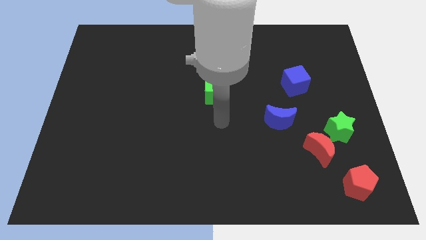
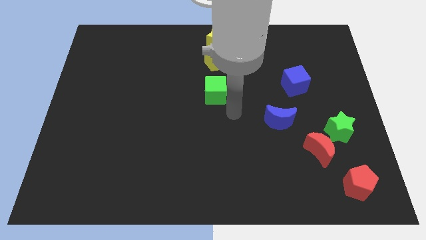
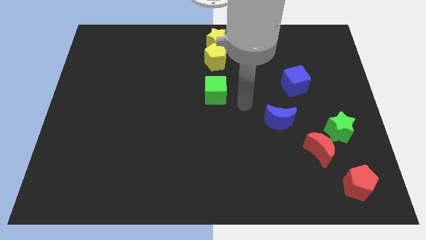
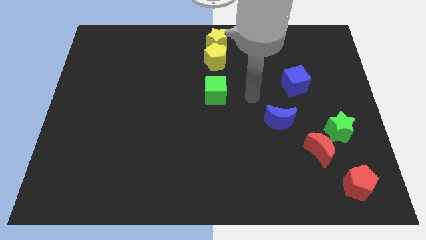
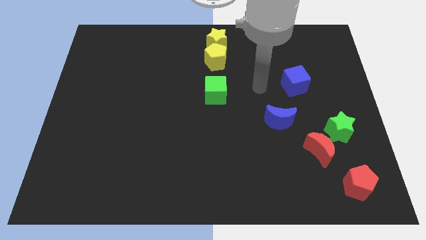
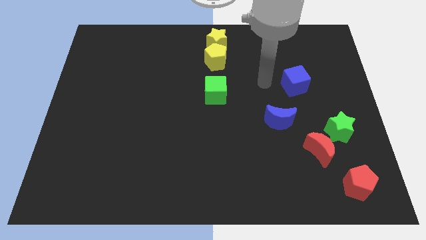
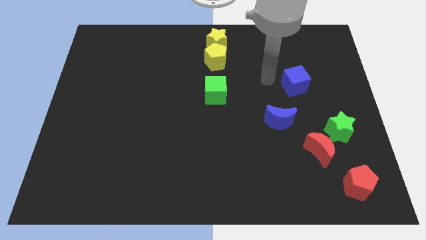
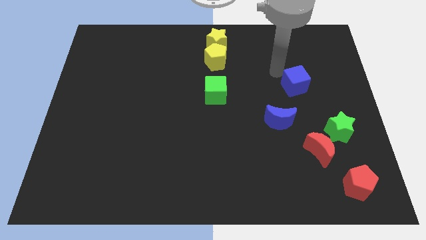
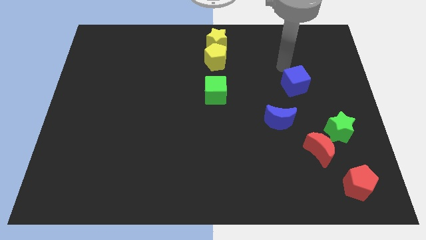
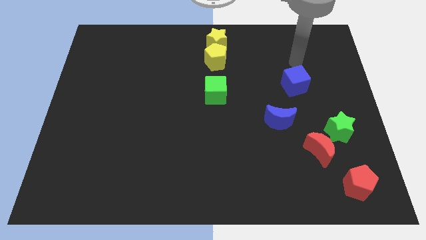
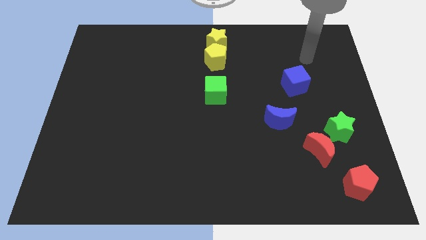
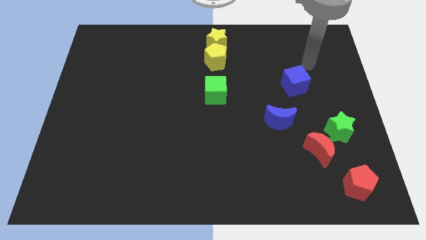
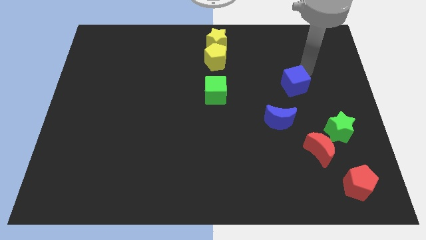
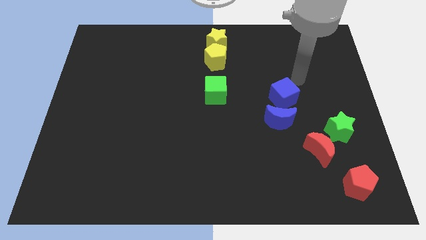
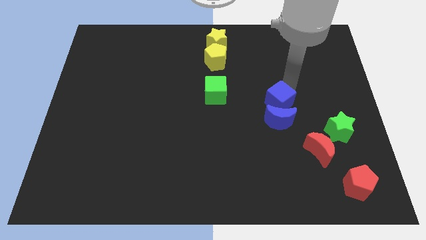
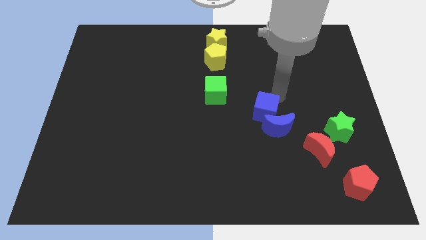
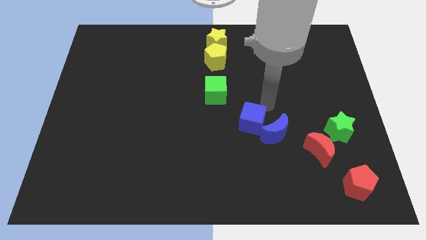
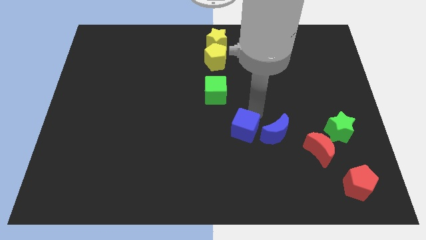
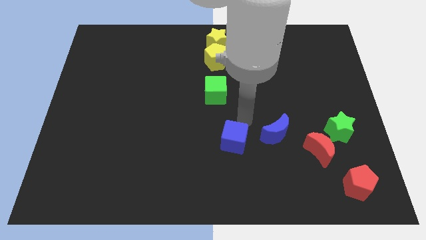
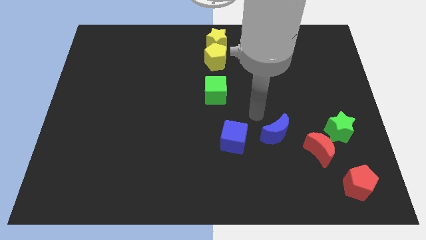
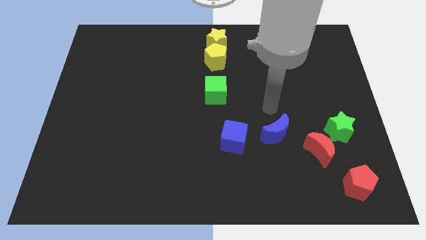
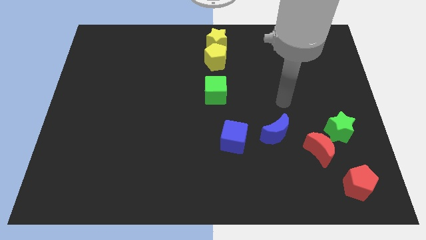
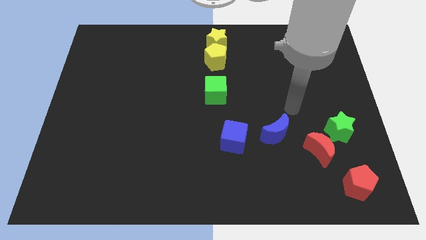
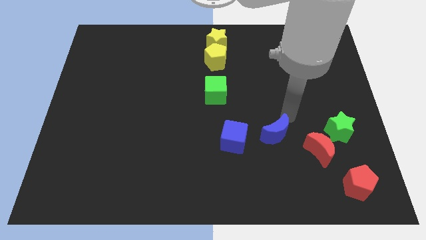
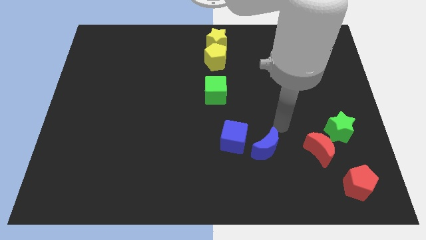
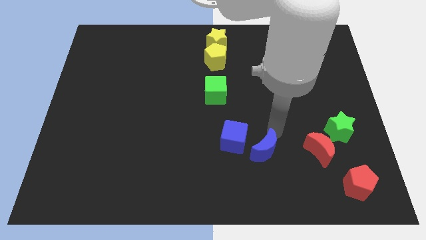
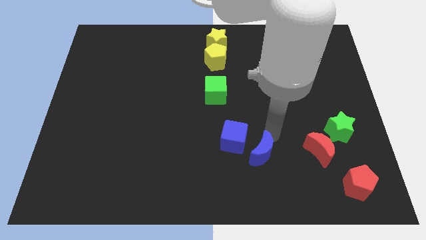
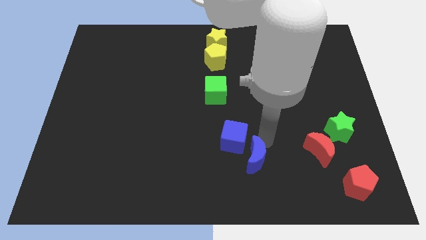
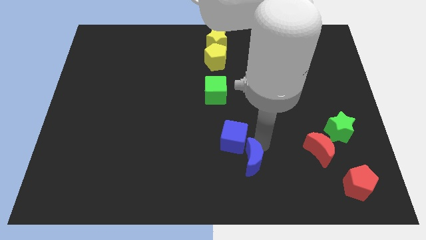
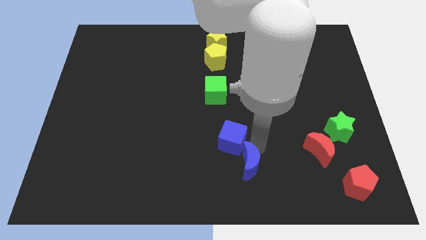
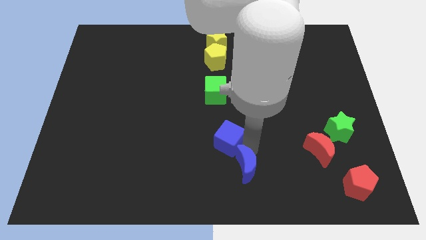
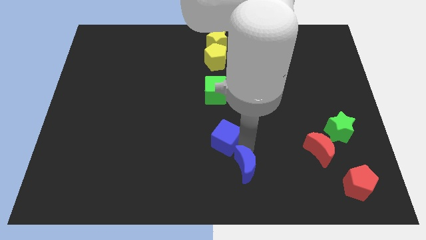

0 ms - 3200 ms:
push blue moon and blue cube towards bottom center

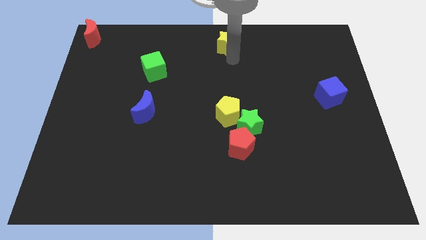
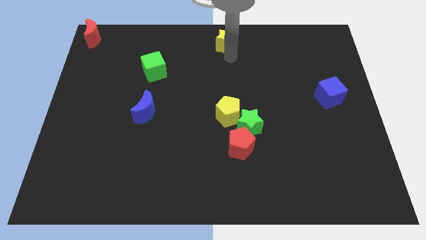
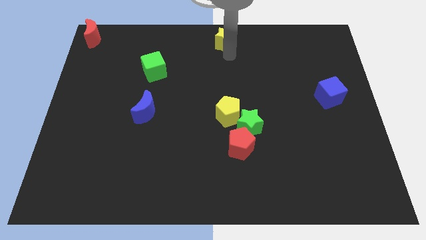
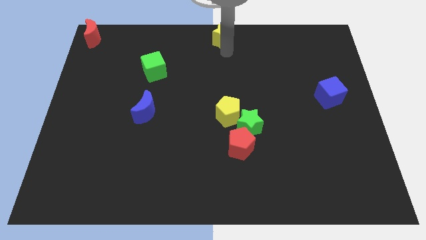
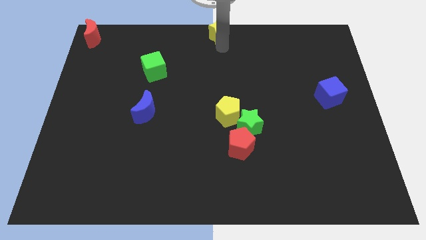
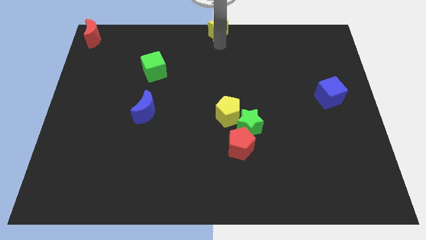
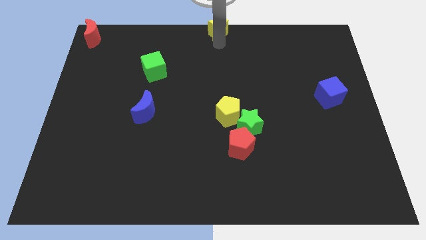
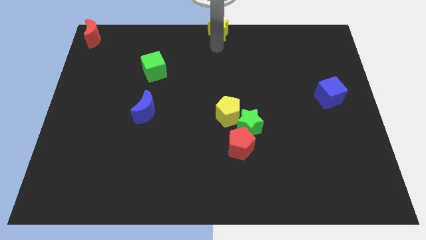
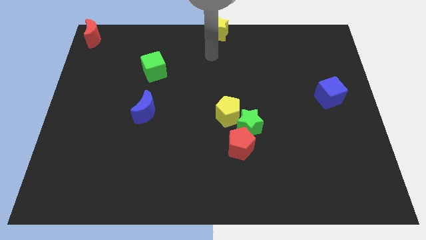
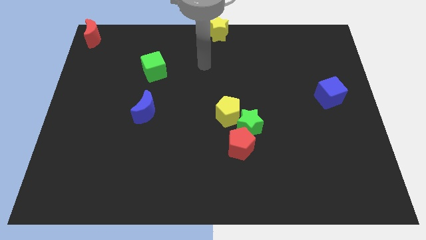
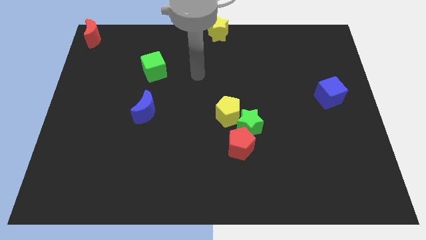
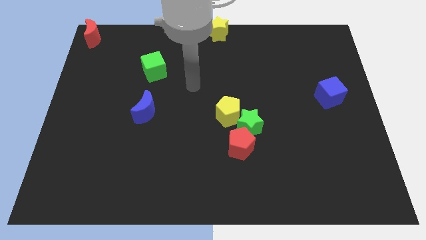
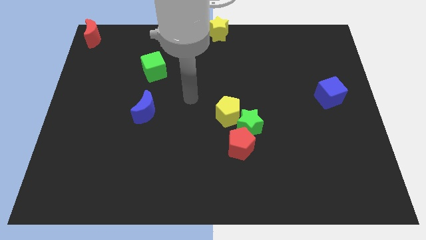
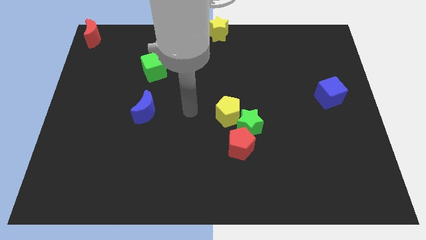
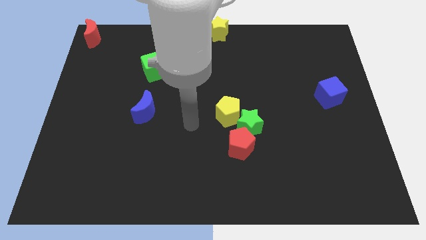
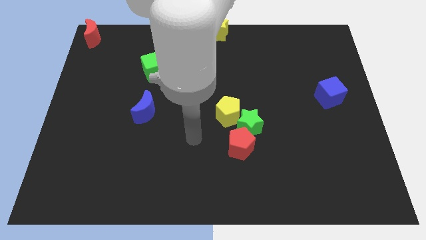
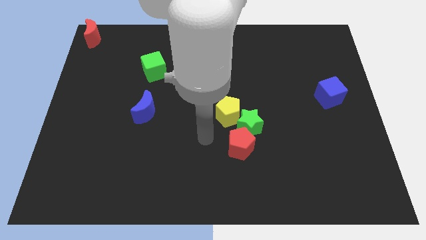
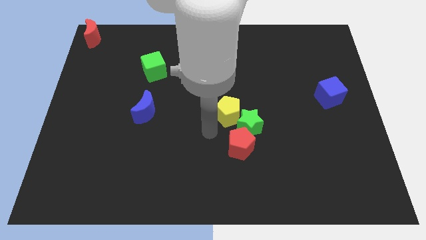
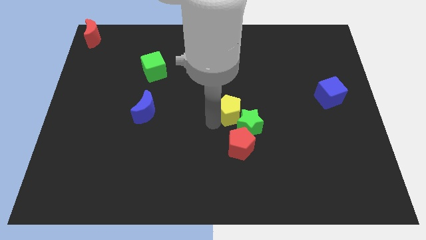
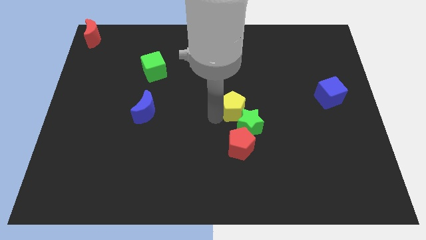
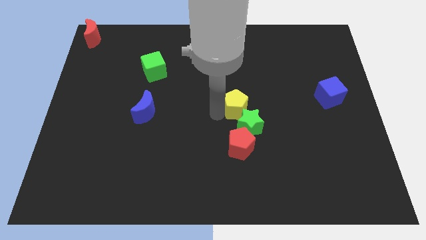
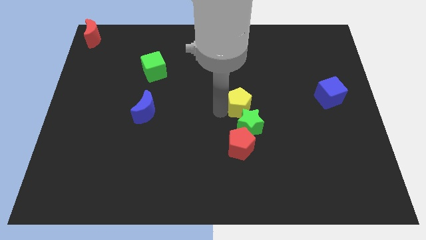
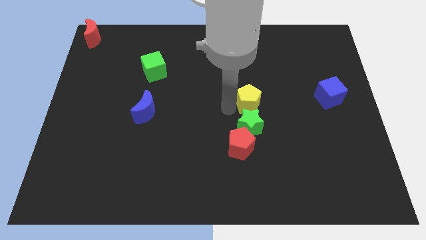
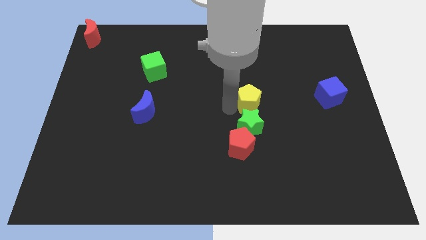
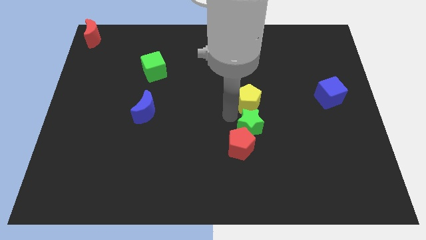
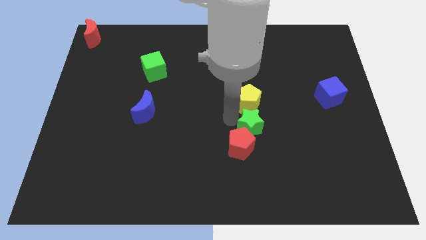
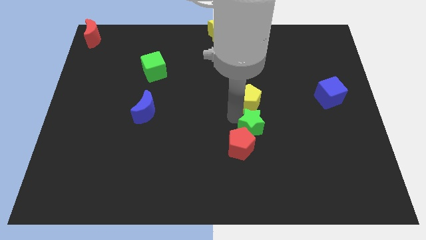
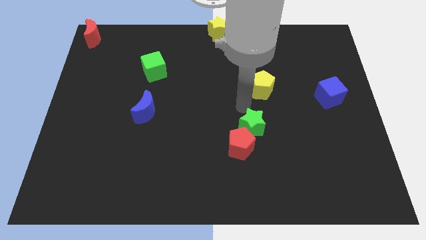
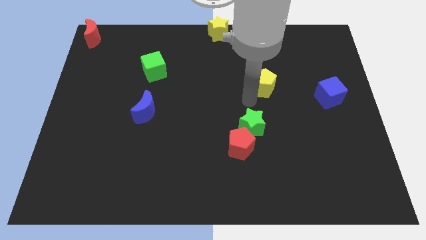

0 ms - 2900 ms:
place yellow pentagon to the left of blue cube

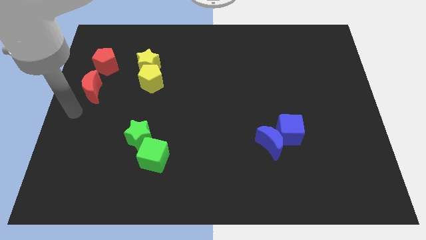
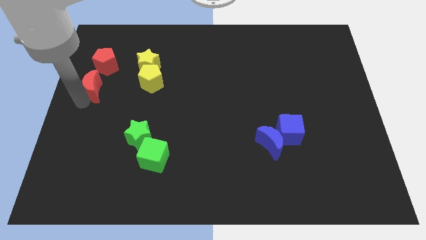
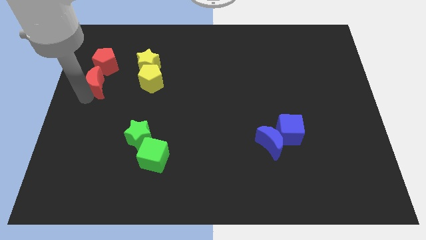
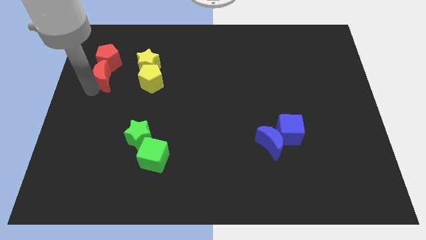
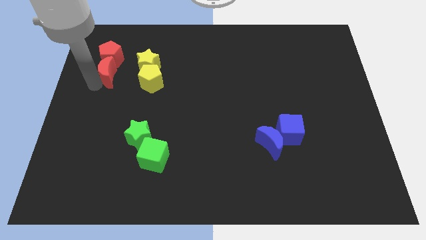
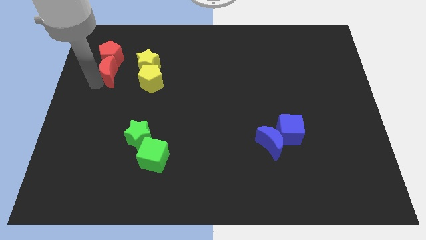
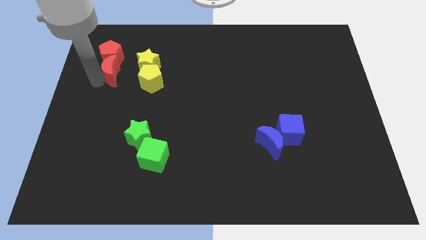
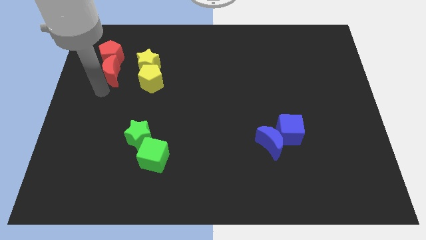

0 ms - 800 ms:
push the red moon in to red pentagon

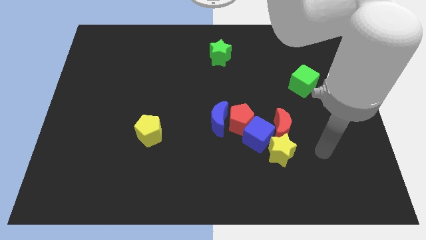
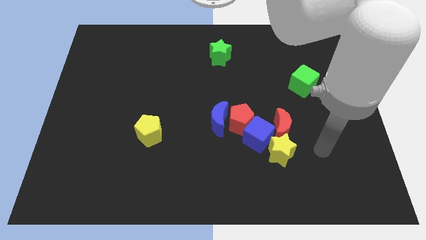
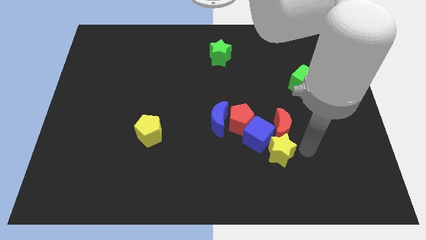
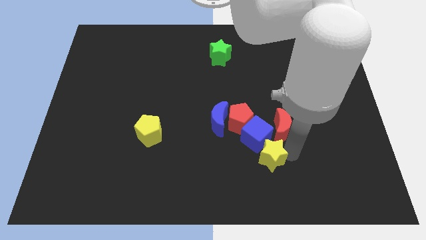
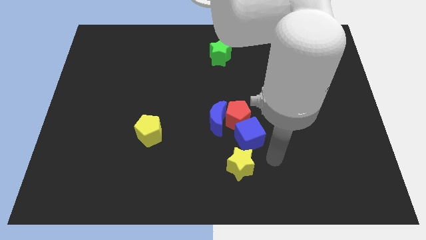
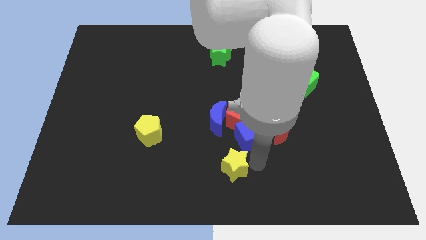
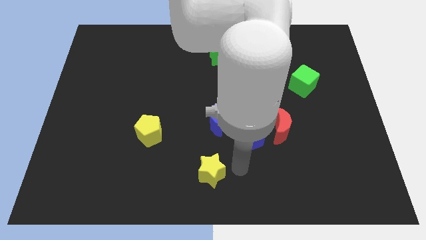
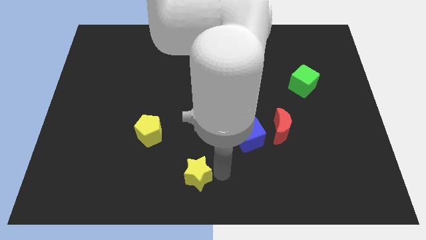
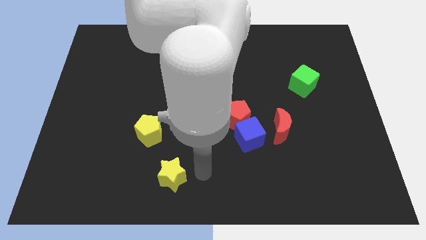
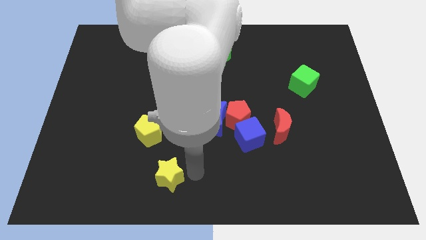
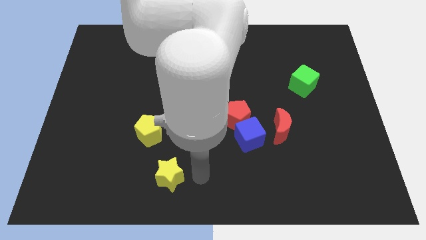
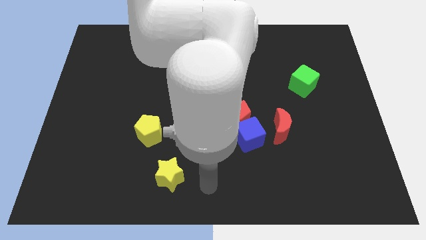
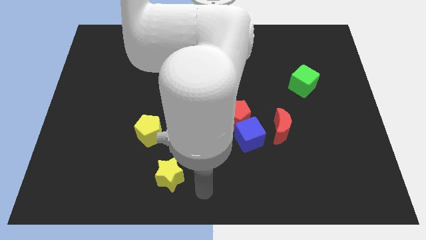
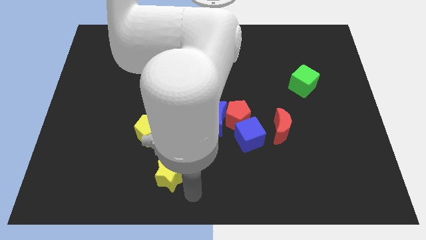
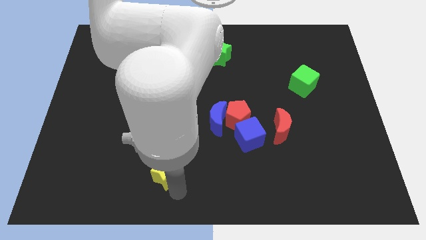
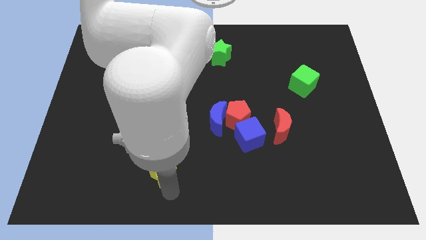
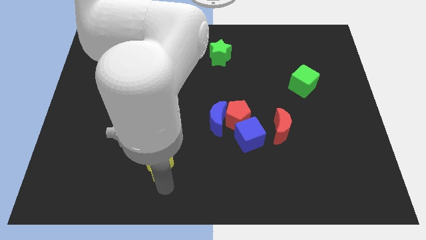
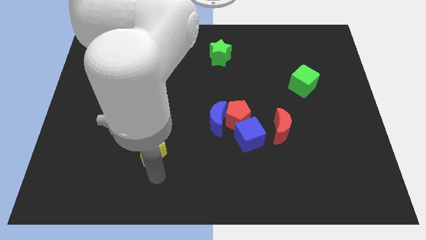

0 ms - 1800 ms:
move the yellow star below the yellow pentagon

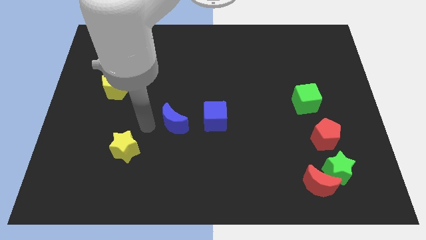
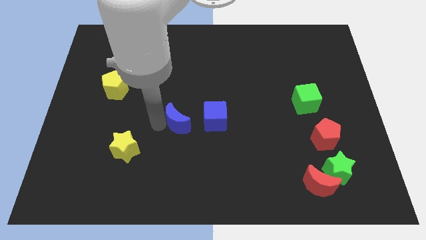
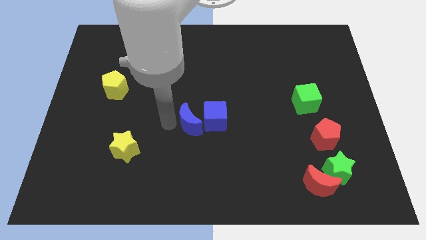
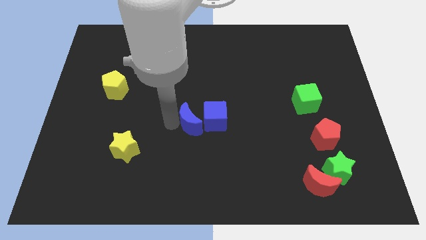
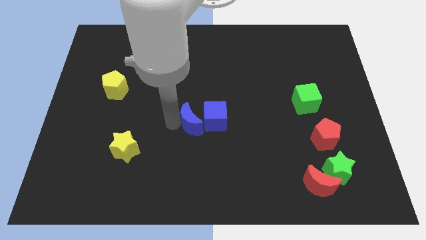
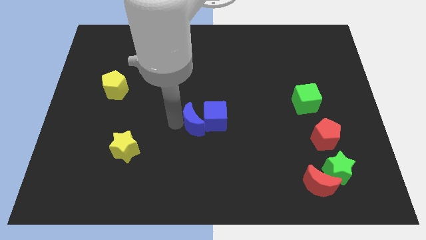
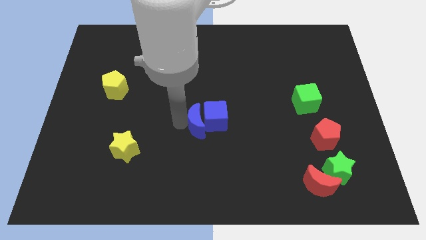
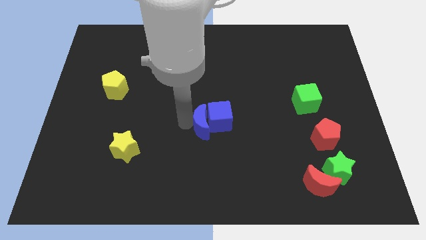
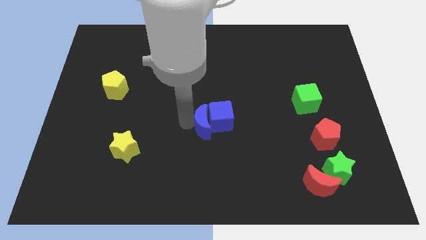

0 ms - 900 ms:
push the blue crescent into the blue cube
